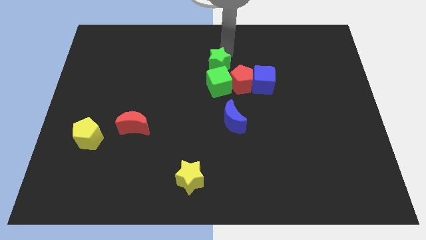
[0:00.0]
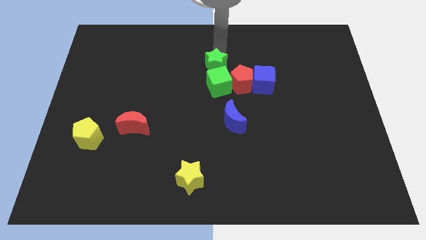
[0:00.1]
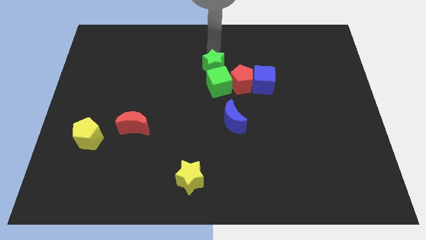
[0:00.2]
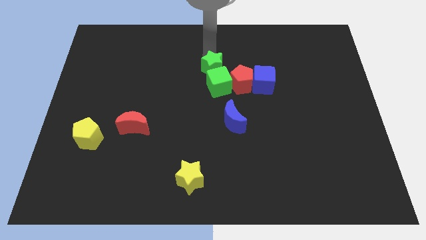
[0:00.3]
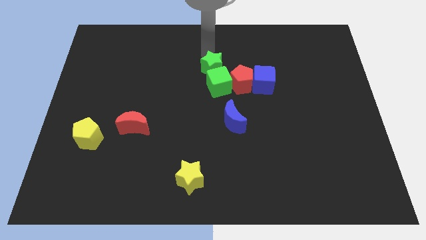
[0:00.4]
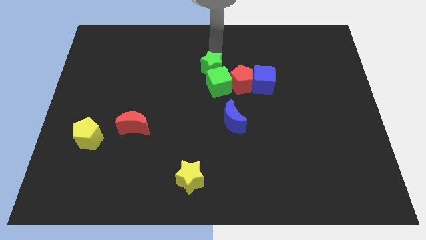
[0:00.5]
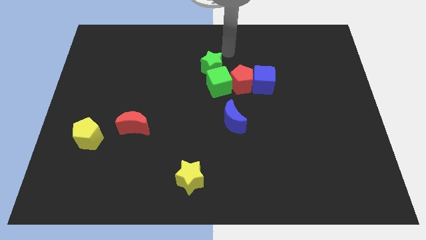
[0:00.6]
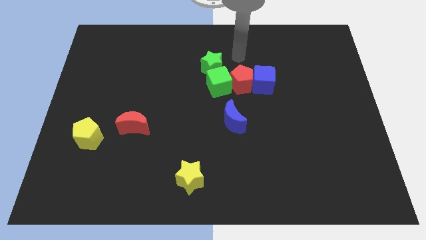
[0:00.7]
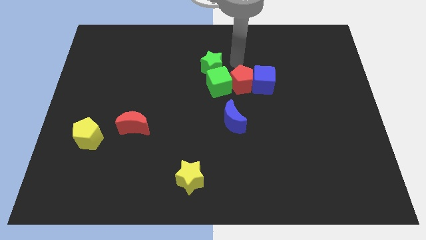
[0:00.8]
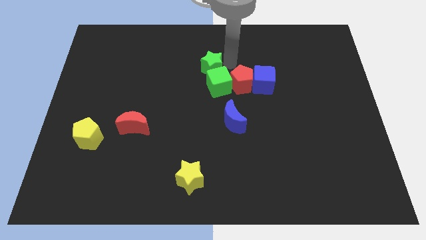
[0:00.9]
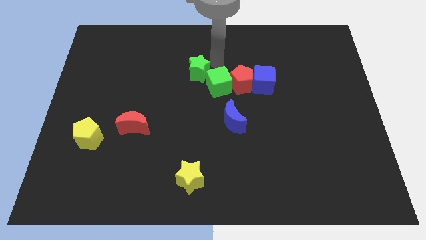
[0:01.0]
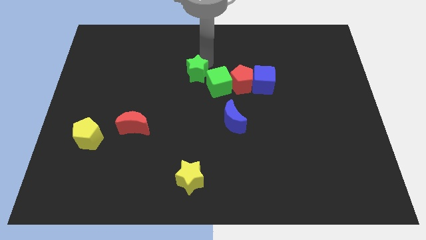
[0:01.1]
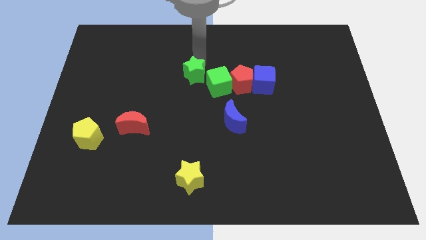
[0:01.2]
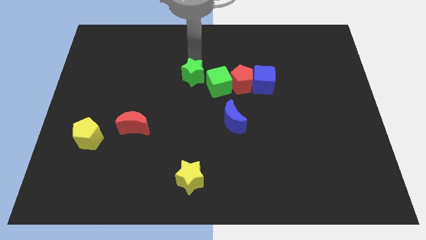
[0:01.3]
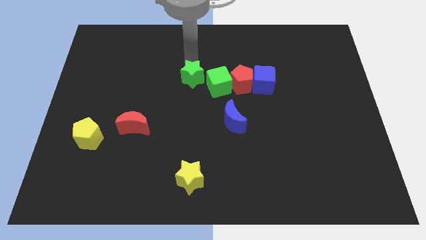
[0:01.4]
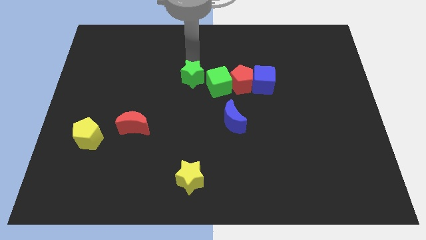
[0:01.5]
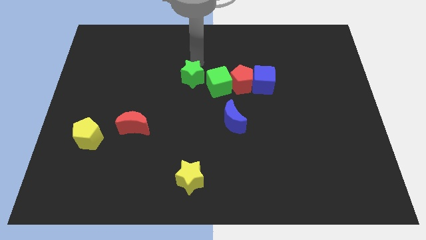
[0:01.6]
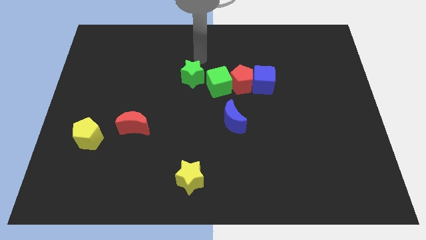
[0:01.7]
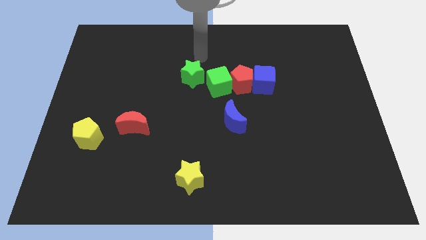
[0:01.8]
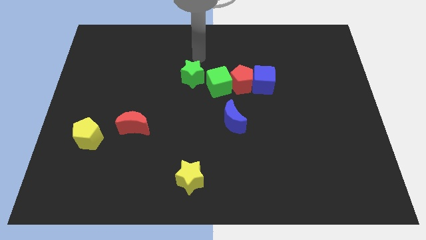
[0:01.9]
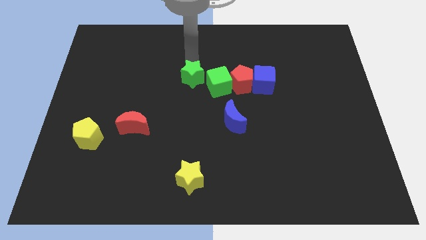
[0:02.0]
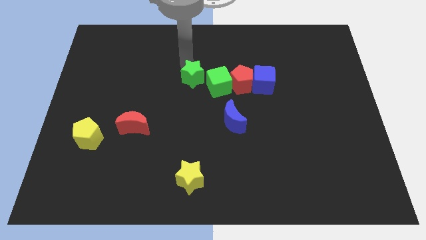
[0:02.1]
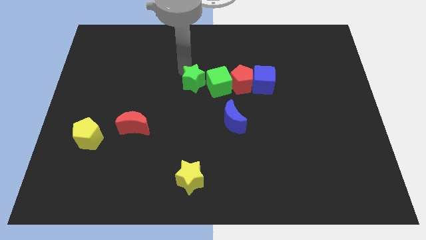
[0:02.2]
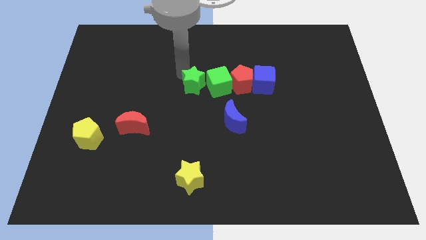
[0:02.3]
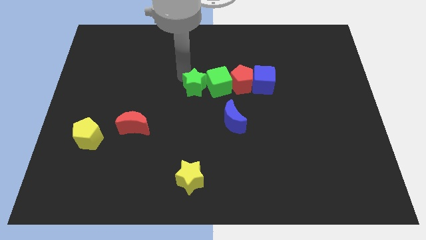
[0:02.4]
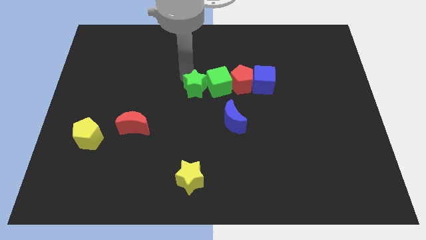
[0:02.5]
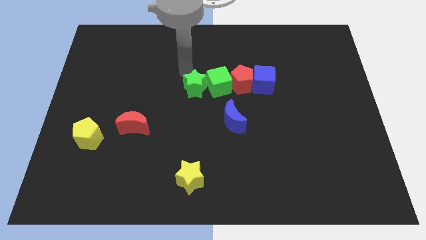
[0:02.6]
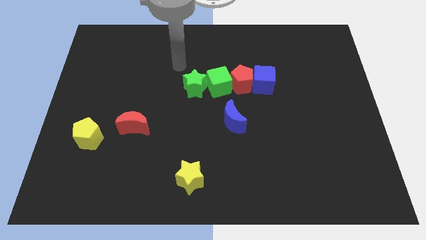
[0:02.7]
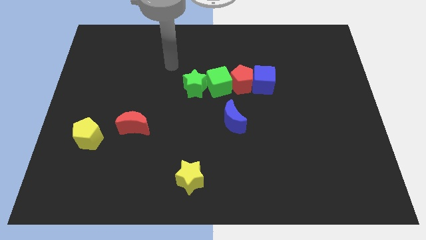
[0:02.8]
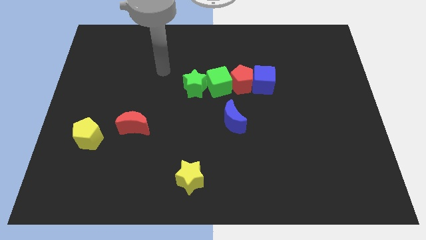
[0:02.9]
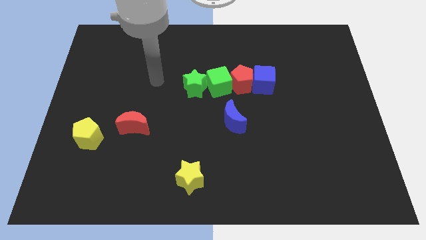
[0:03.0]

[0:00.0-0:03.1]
place green star to the left of green cube

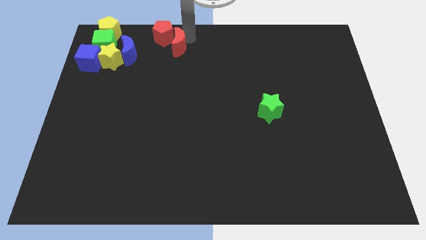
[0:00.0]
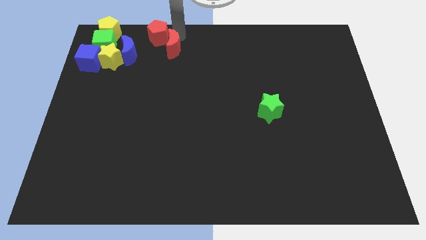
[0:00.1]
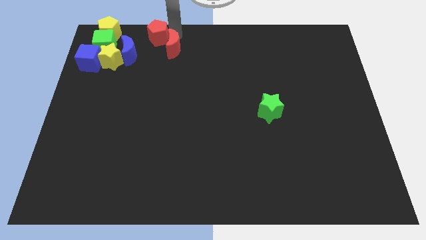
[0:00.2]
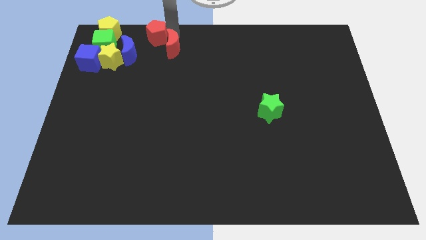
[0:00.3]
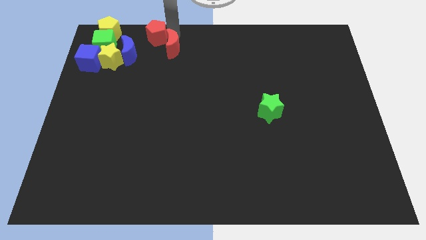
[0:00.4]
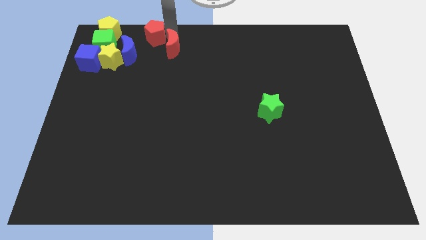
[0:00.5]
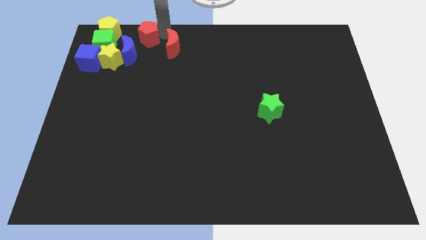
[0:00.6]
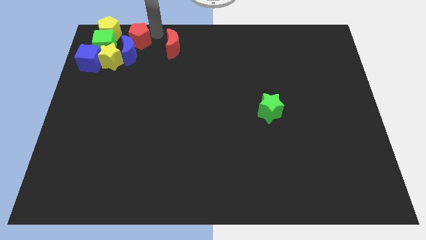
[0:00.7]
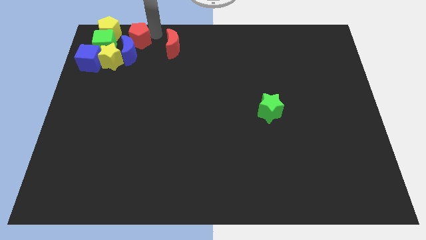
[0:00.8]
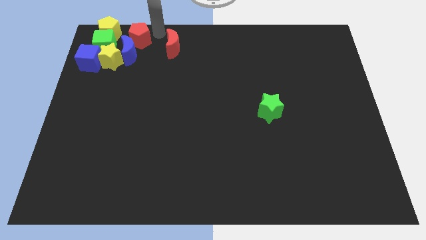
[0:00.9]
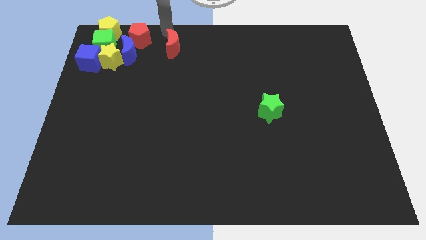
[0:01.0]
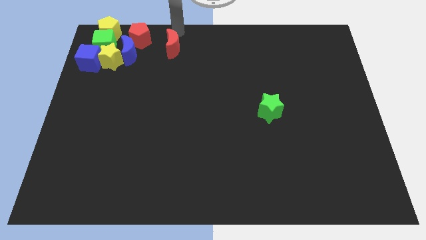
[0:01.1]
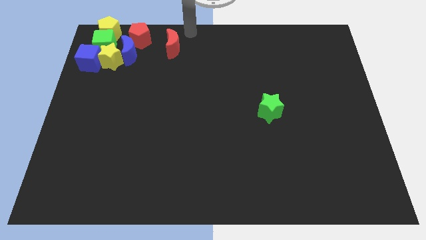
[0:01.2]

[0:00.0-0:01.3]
push the red pentagon away from the red crescent

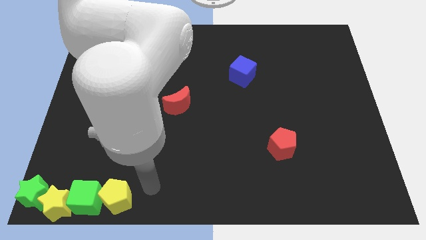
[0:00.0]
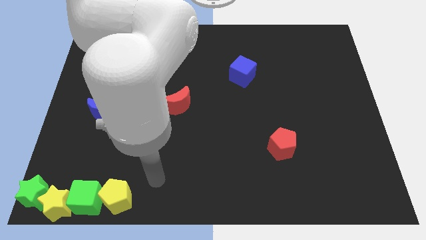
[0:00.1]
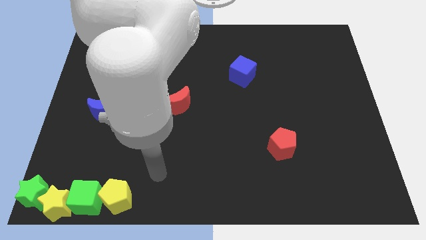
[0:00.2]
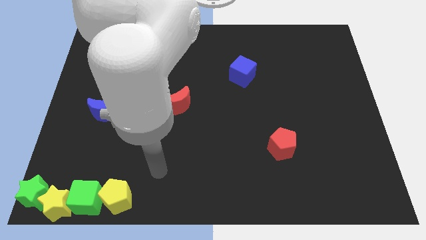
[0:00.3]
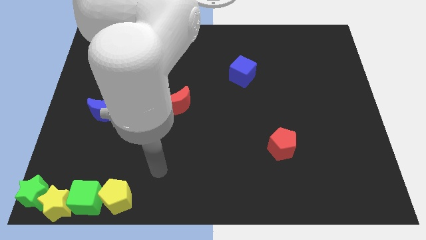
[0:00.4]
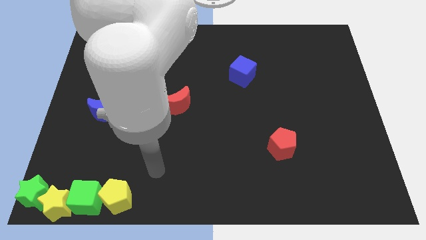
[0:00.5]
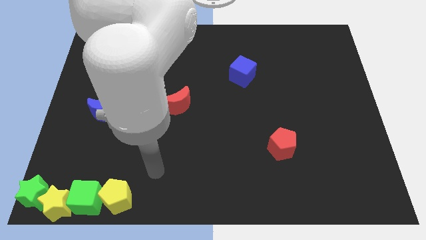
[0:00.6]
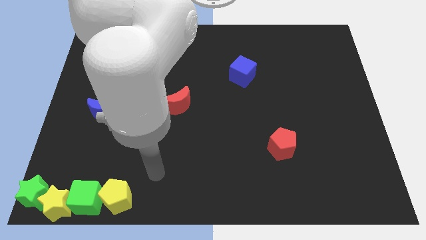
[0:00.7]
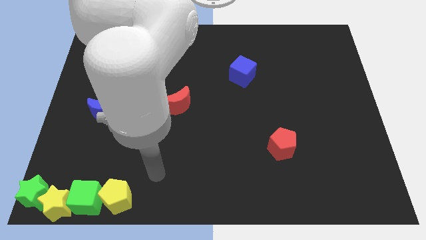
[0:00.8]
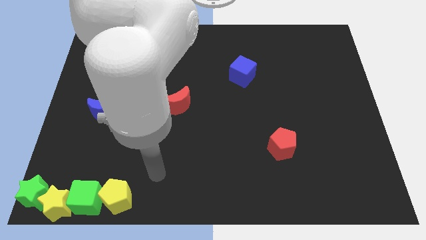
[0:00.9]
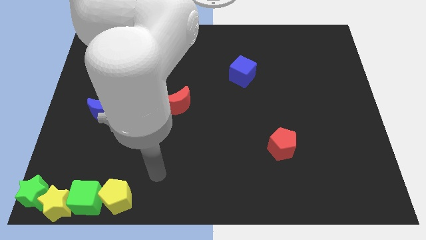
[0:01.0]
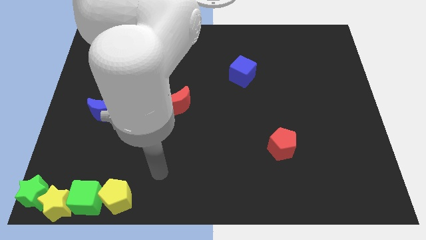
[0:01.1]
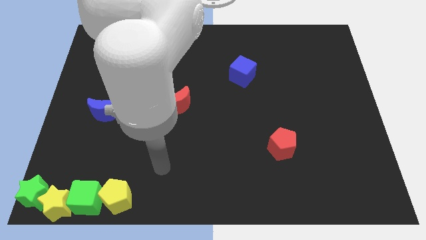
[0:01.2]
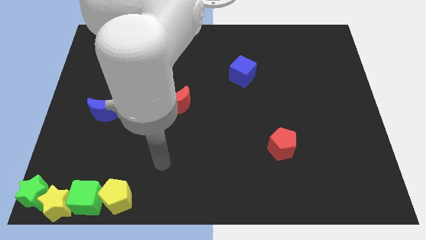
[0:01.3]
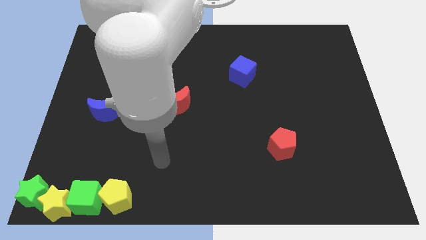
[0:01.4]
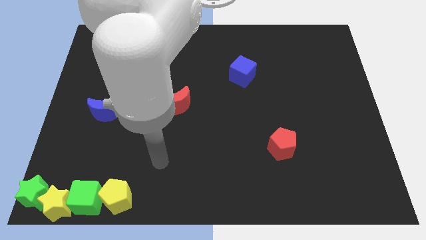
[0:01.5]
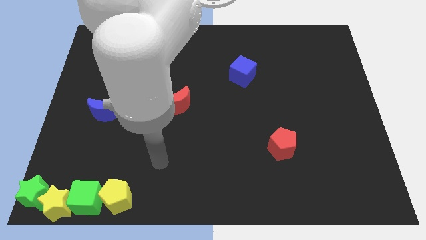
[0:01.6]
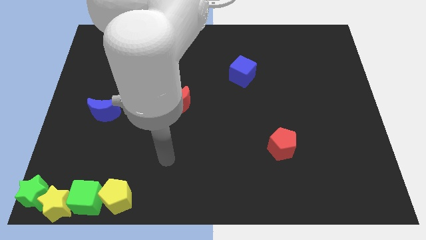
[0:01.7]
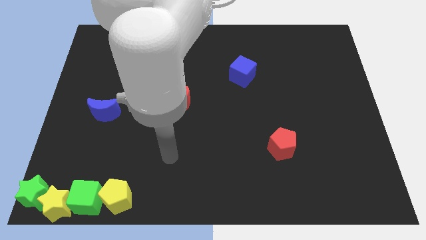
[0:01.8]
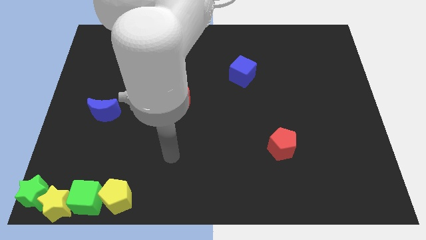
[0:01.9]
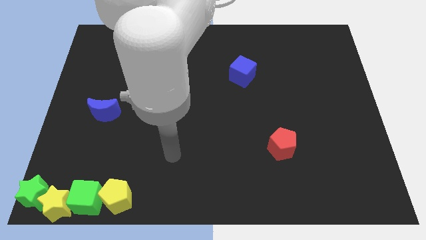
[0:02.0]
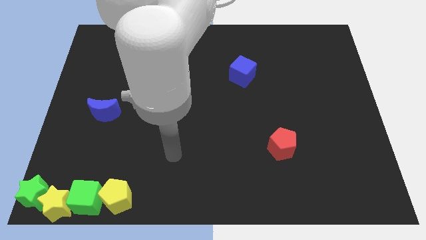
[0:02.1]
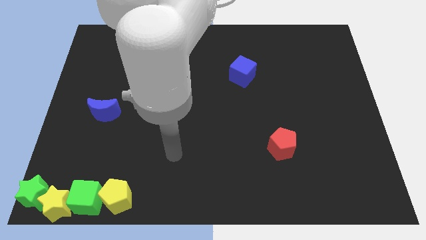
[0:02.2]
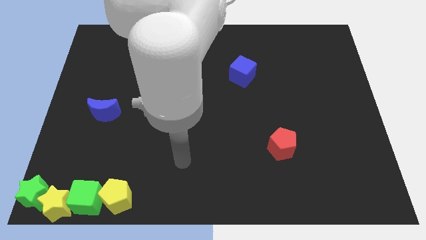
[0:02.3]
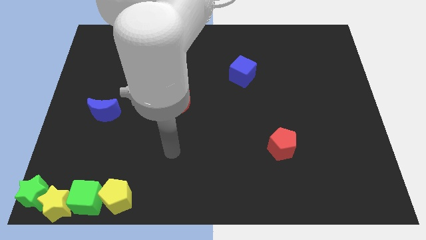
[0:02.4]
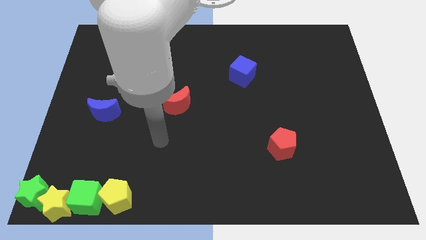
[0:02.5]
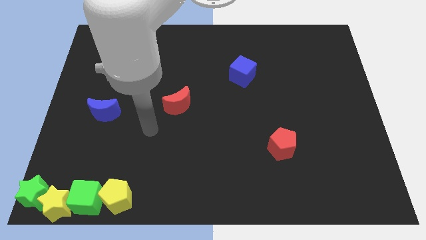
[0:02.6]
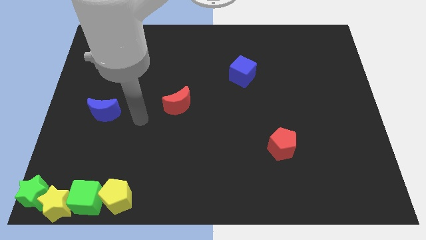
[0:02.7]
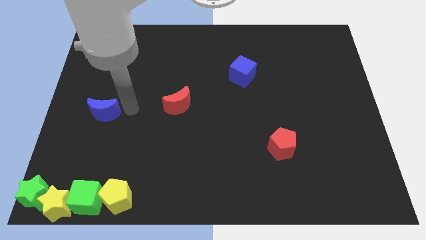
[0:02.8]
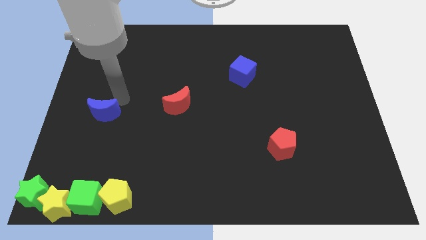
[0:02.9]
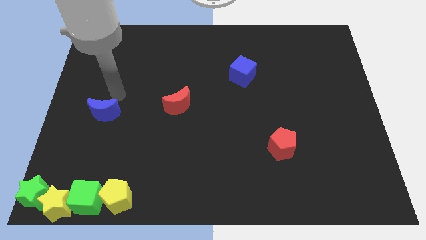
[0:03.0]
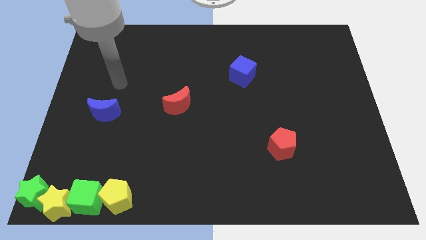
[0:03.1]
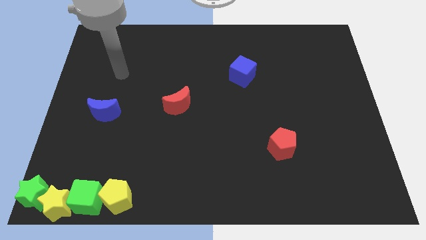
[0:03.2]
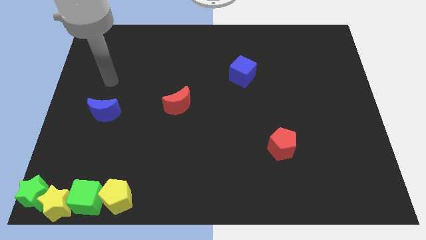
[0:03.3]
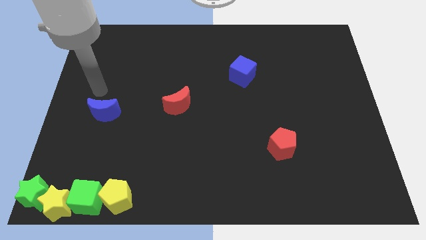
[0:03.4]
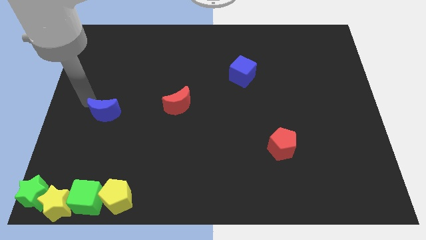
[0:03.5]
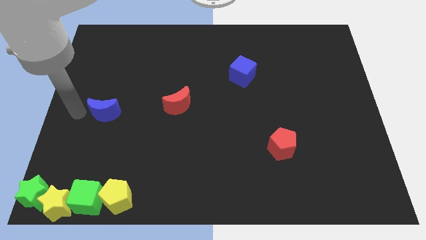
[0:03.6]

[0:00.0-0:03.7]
move your arm left to the blue crescent

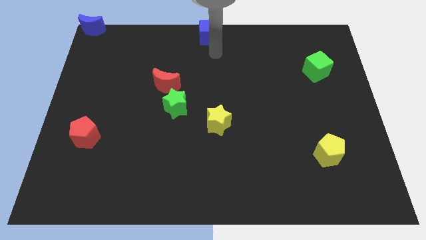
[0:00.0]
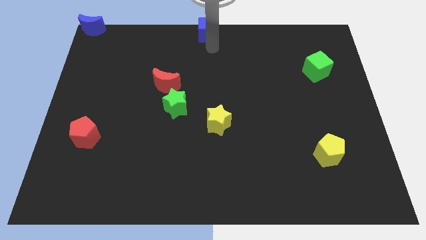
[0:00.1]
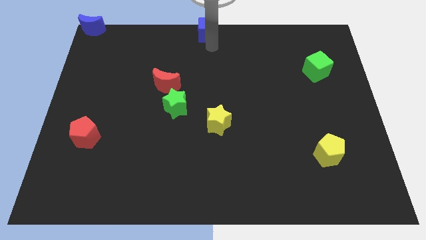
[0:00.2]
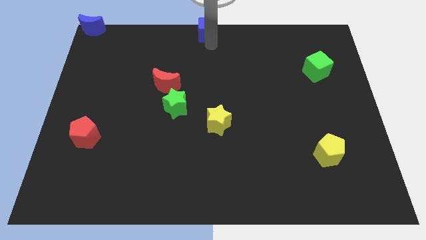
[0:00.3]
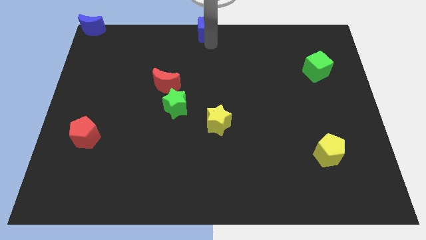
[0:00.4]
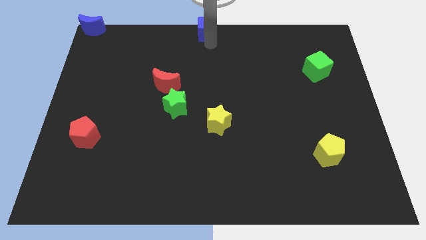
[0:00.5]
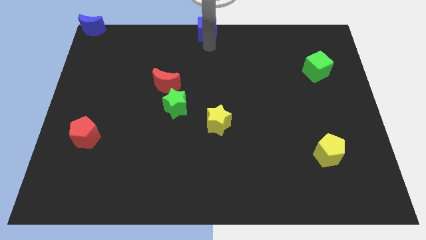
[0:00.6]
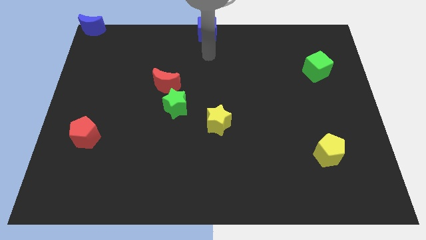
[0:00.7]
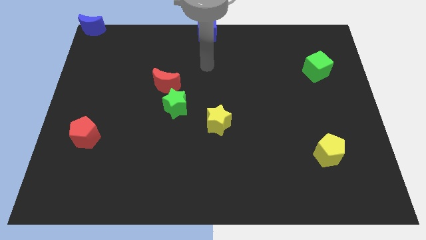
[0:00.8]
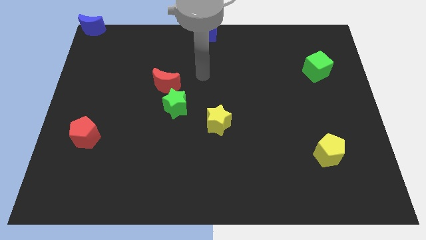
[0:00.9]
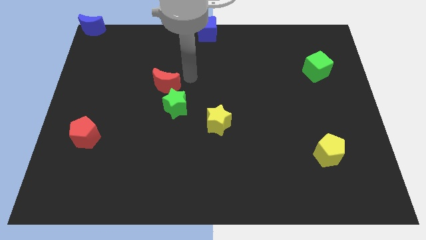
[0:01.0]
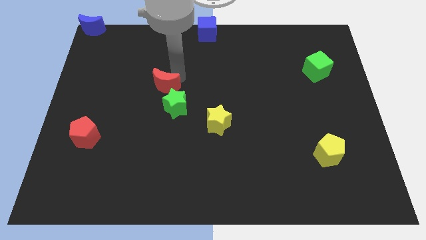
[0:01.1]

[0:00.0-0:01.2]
place your arm to the top of red moon
